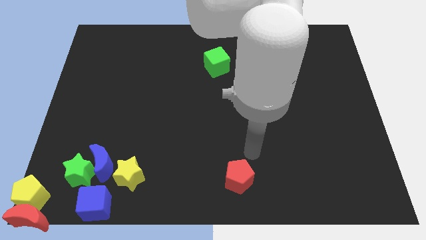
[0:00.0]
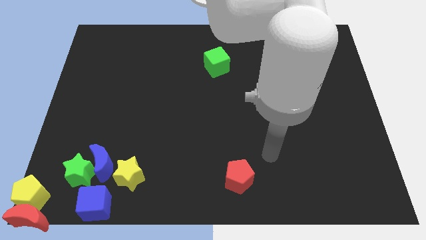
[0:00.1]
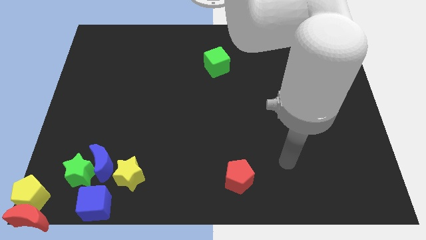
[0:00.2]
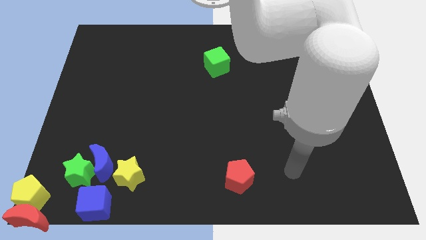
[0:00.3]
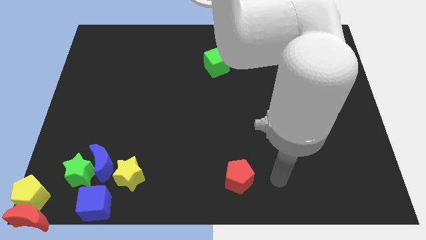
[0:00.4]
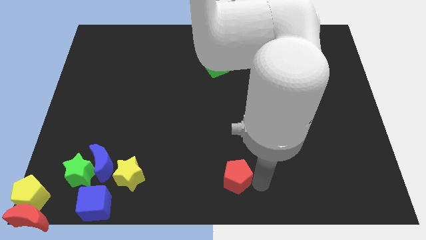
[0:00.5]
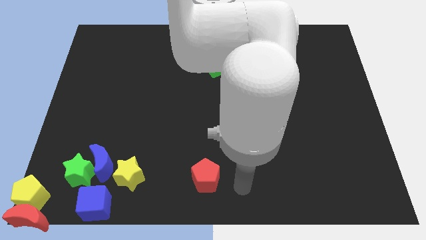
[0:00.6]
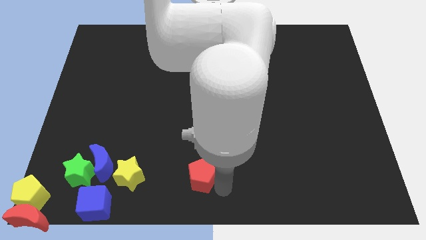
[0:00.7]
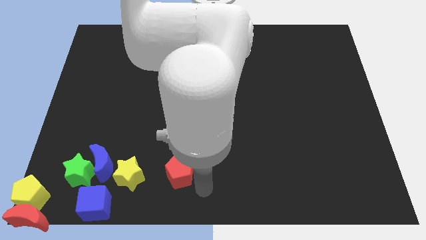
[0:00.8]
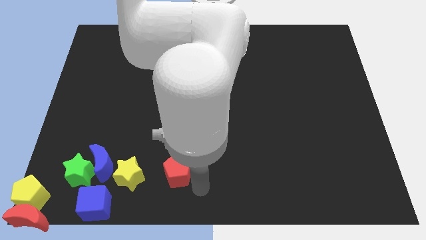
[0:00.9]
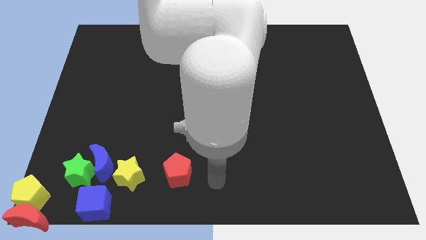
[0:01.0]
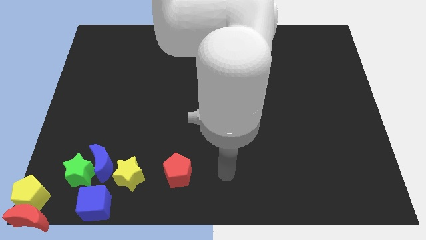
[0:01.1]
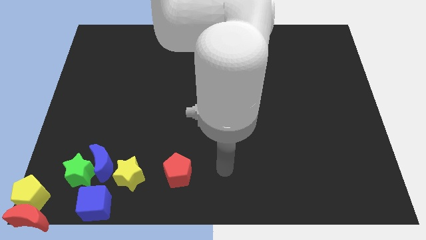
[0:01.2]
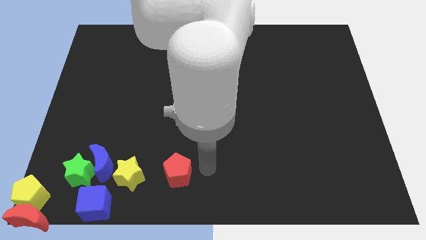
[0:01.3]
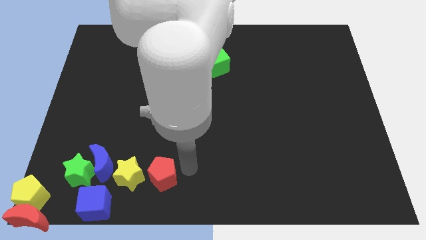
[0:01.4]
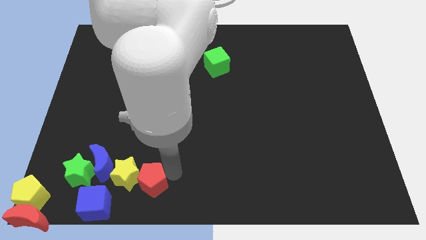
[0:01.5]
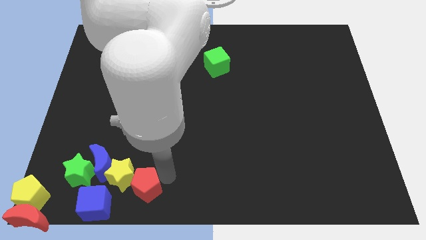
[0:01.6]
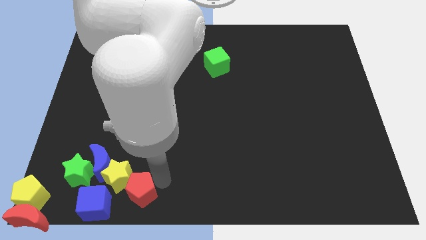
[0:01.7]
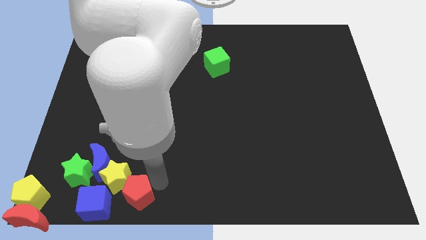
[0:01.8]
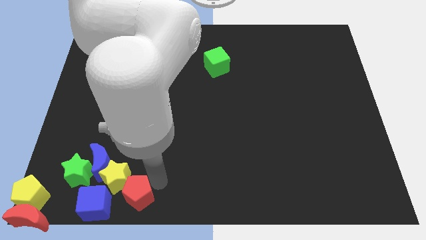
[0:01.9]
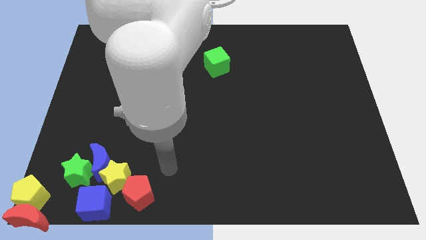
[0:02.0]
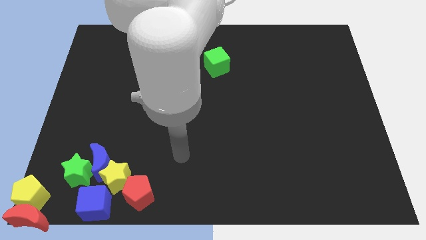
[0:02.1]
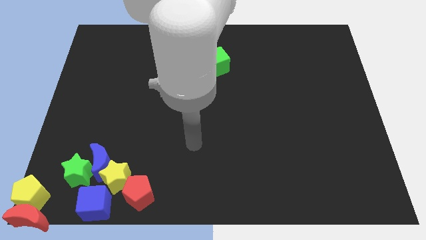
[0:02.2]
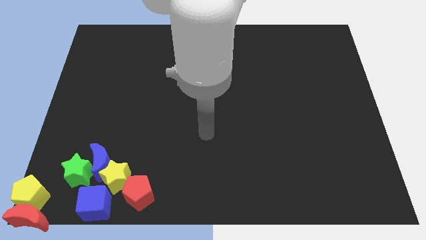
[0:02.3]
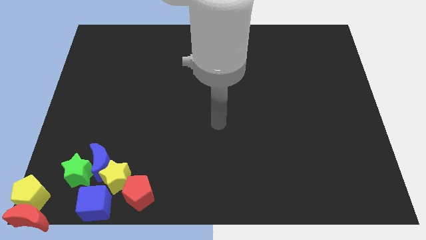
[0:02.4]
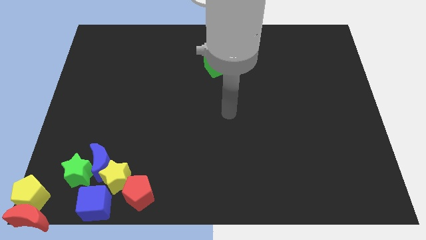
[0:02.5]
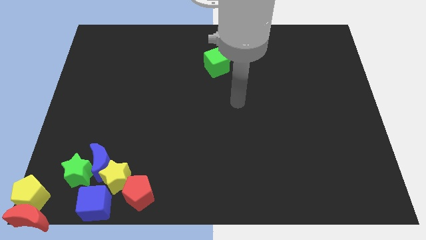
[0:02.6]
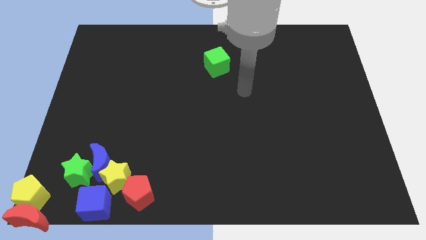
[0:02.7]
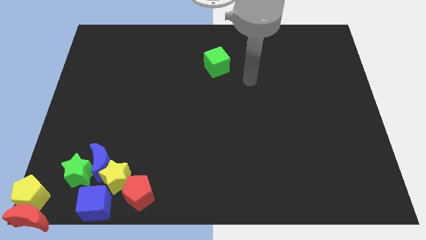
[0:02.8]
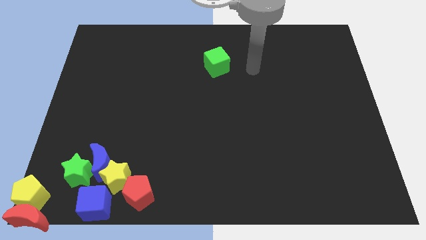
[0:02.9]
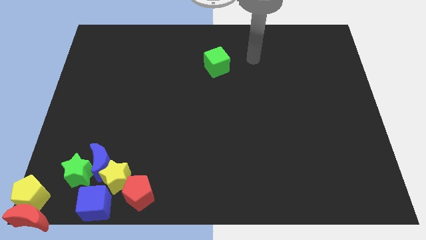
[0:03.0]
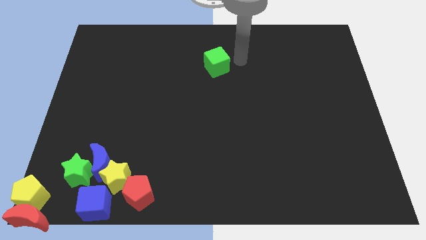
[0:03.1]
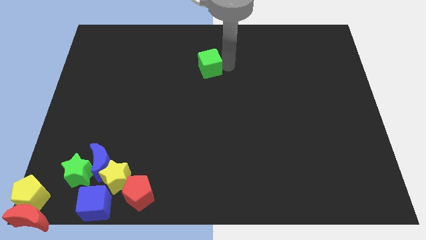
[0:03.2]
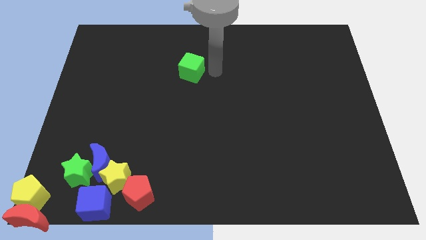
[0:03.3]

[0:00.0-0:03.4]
push the red pentagon into the yellow star

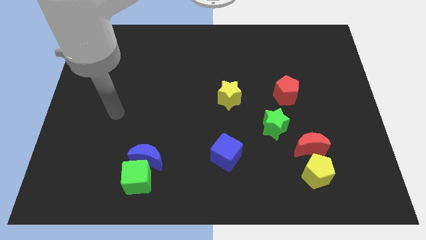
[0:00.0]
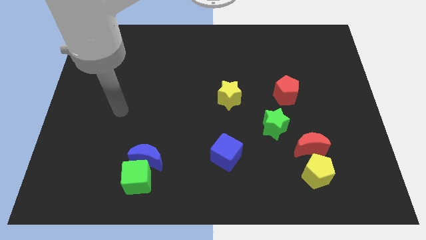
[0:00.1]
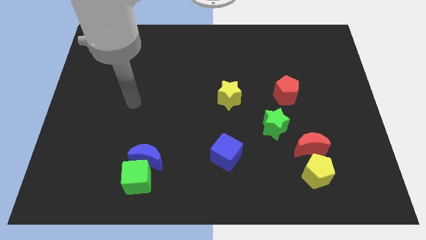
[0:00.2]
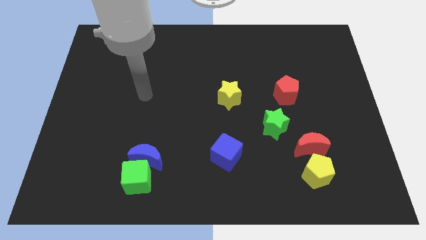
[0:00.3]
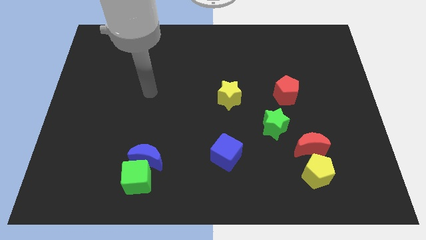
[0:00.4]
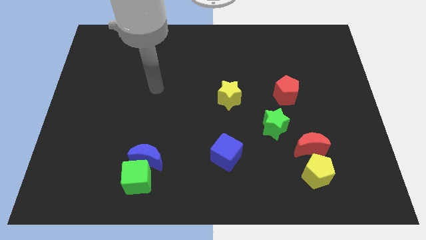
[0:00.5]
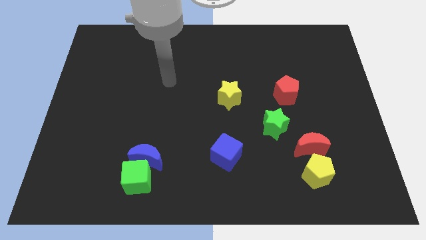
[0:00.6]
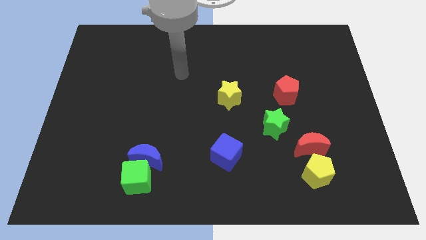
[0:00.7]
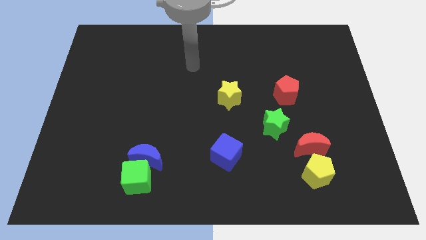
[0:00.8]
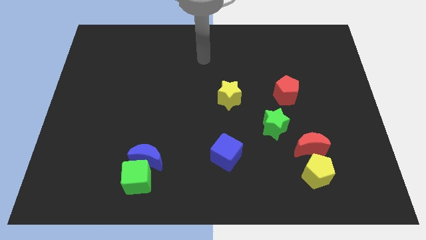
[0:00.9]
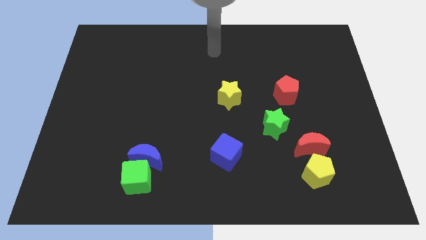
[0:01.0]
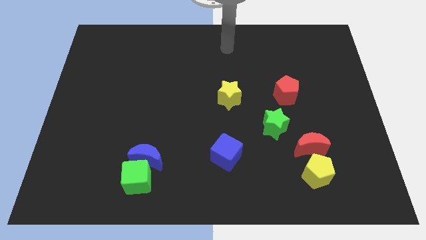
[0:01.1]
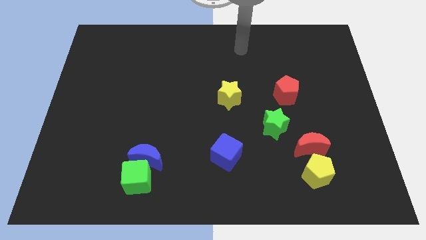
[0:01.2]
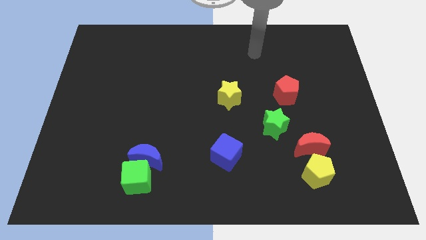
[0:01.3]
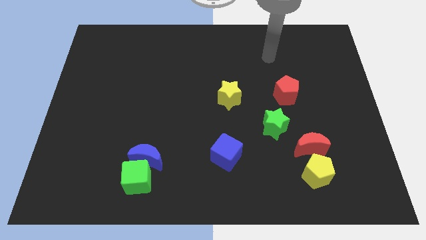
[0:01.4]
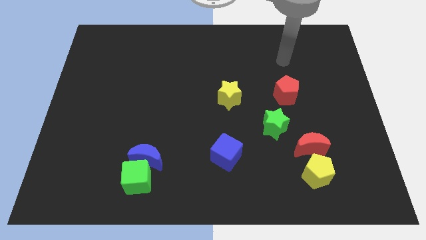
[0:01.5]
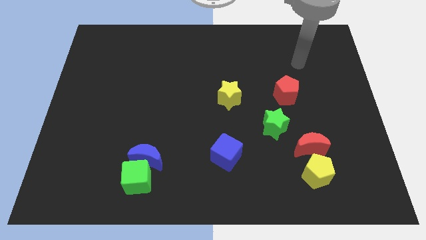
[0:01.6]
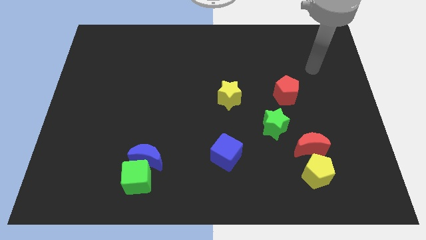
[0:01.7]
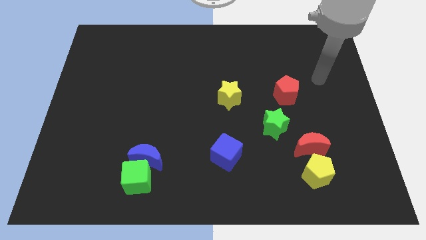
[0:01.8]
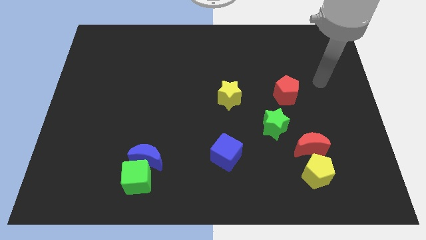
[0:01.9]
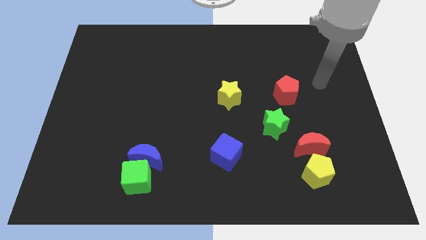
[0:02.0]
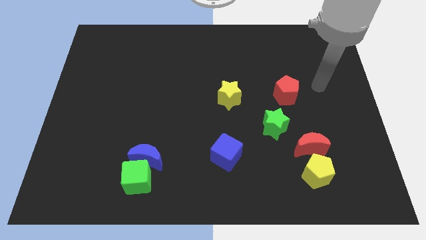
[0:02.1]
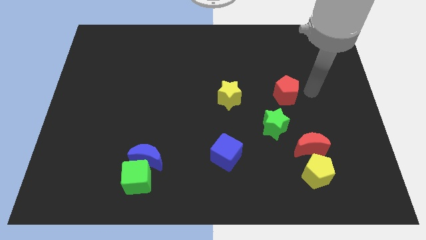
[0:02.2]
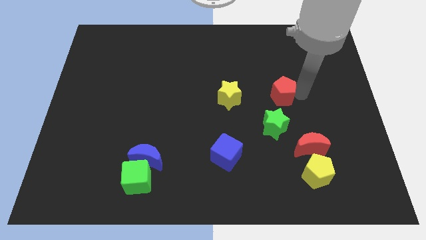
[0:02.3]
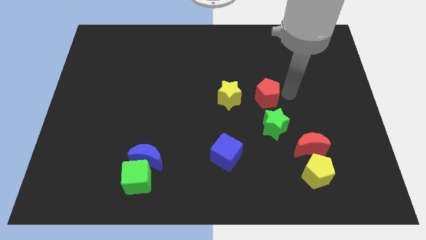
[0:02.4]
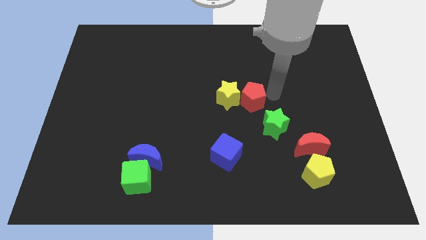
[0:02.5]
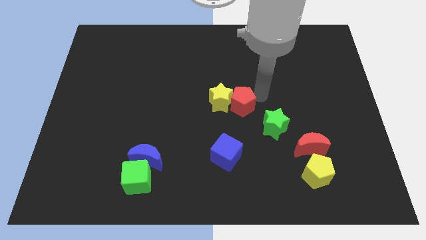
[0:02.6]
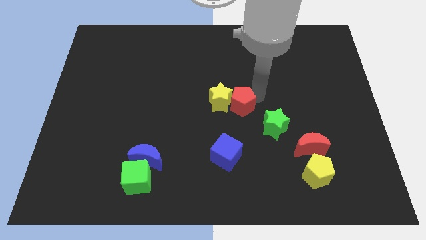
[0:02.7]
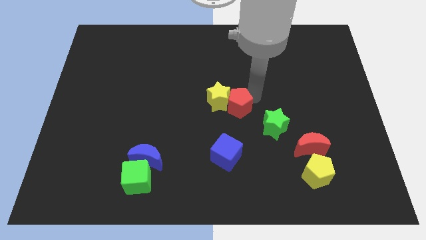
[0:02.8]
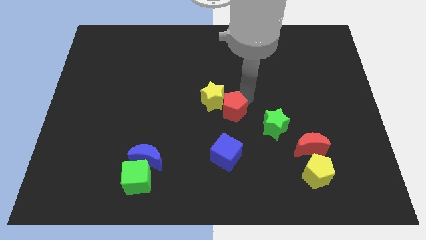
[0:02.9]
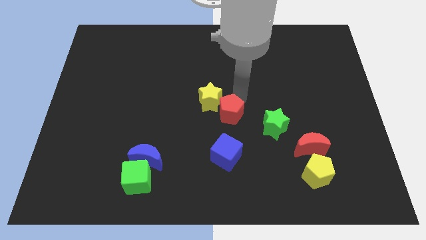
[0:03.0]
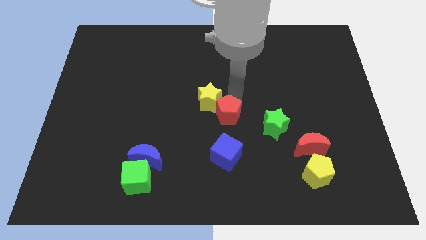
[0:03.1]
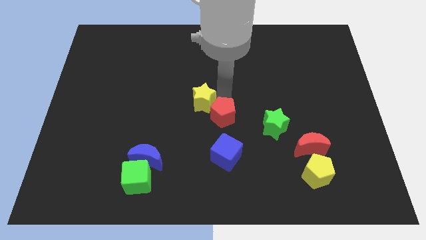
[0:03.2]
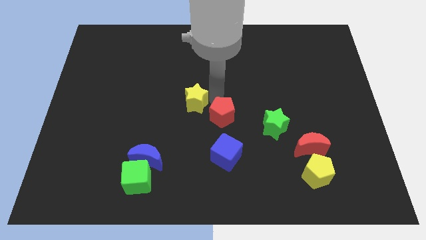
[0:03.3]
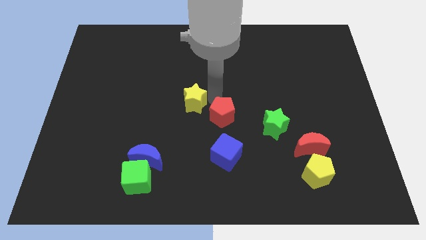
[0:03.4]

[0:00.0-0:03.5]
drag red pentagon towards the center of the board

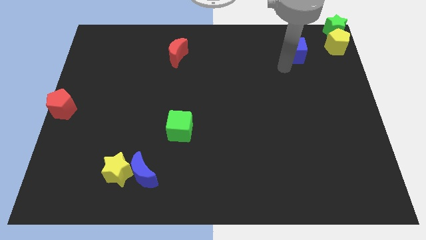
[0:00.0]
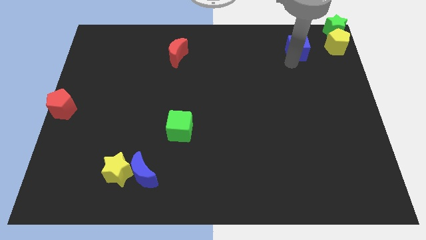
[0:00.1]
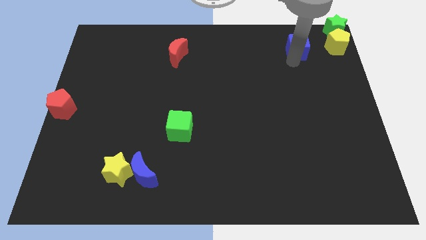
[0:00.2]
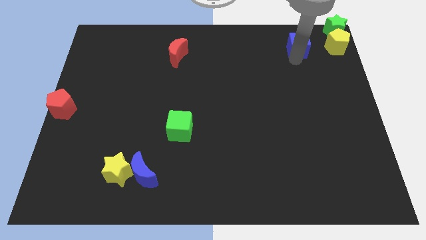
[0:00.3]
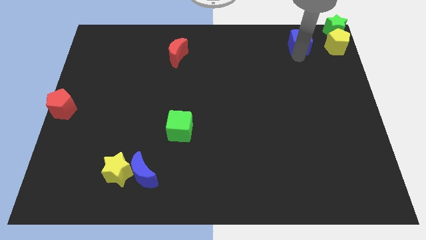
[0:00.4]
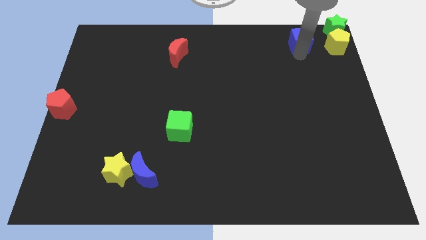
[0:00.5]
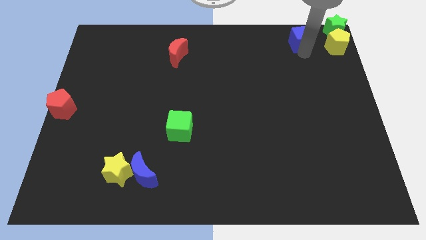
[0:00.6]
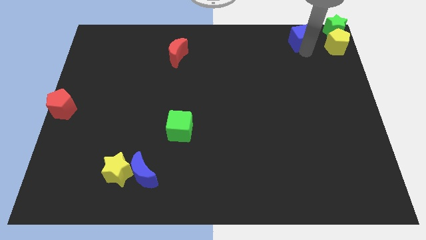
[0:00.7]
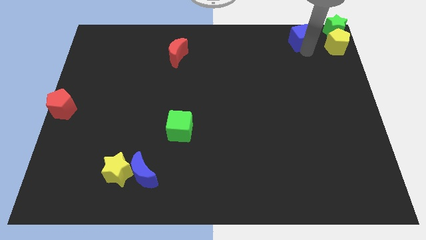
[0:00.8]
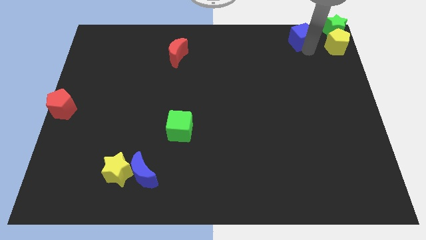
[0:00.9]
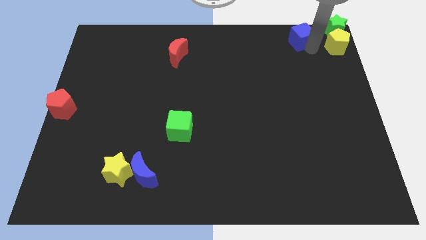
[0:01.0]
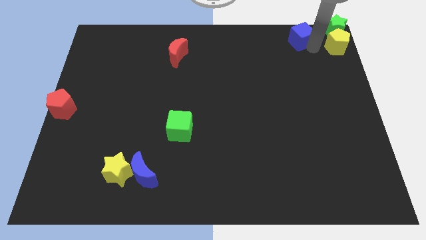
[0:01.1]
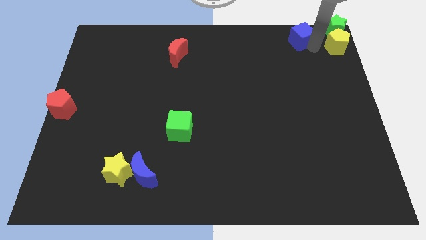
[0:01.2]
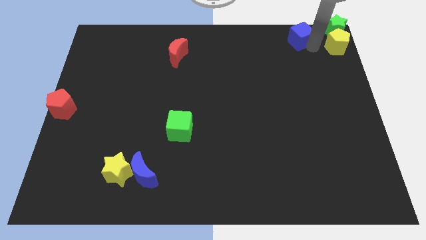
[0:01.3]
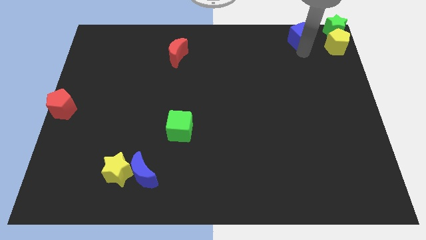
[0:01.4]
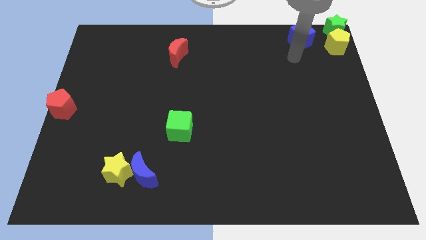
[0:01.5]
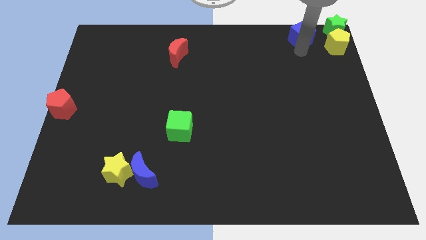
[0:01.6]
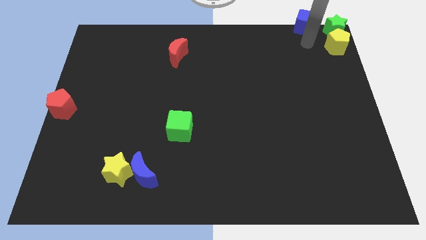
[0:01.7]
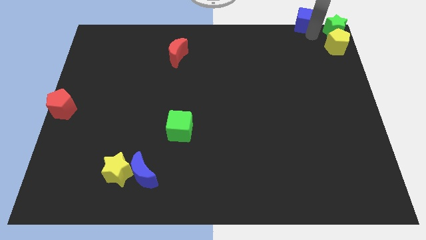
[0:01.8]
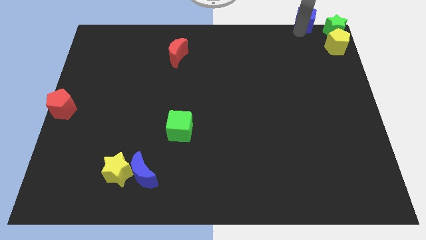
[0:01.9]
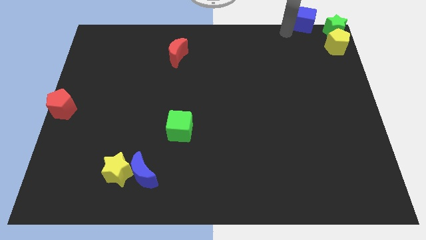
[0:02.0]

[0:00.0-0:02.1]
place the blue cube left to the green star
